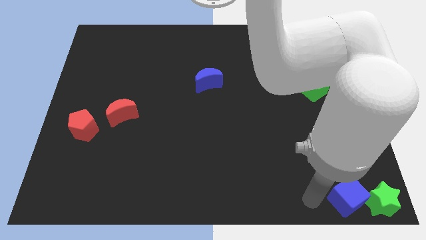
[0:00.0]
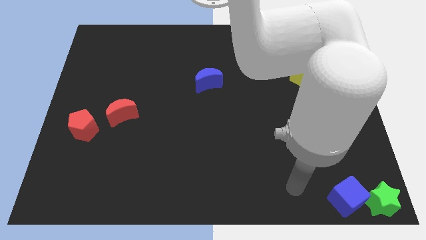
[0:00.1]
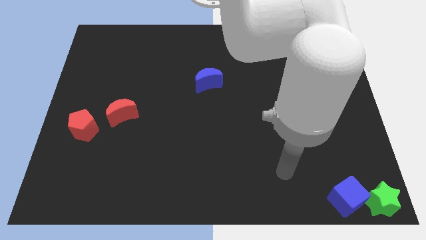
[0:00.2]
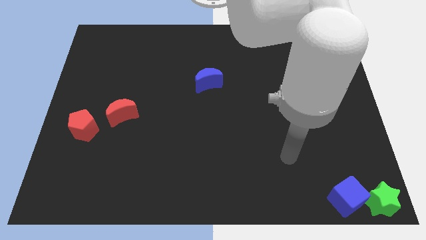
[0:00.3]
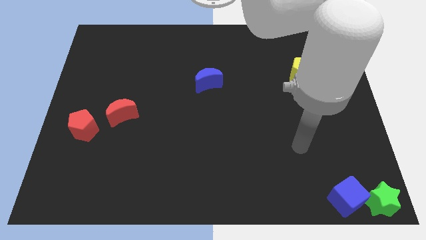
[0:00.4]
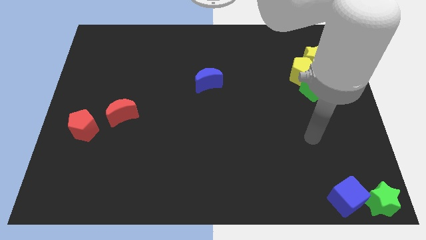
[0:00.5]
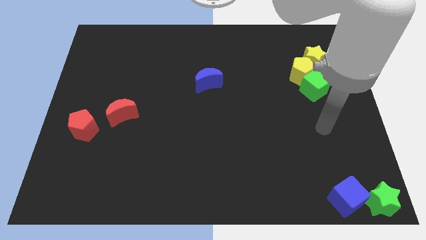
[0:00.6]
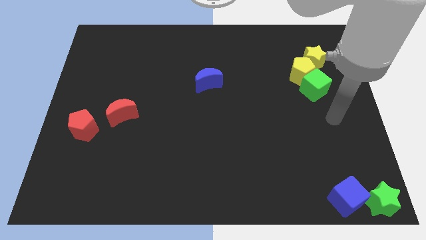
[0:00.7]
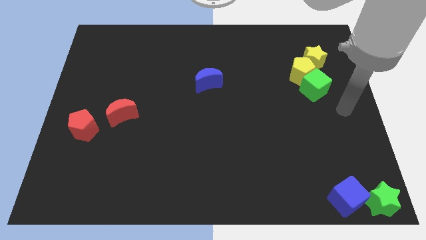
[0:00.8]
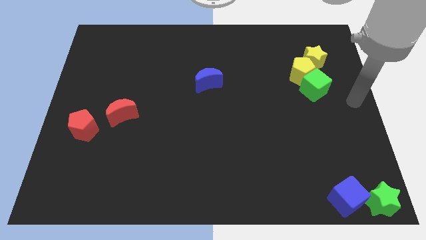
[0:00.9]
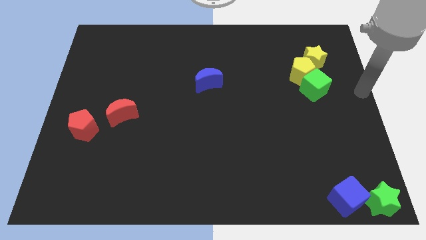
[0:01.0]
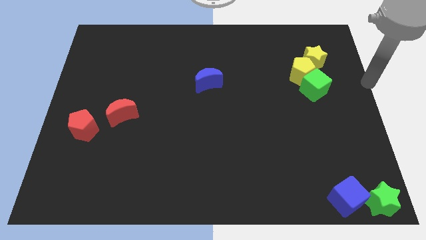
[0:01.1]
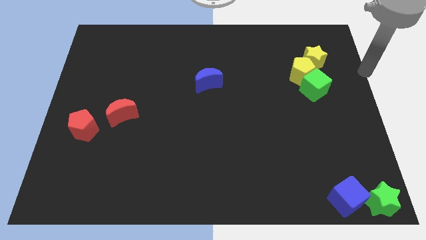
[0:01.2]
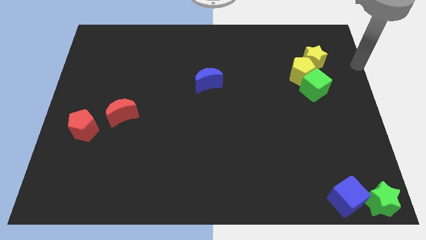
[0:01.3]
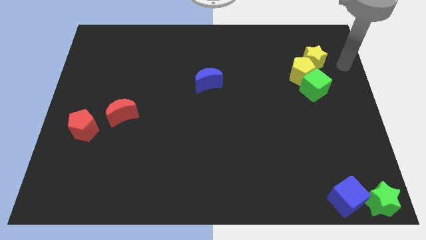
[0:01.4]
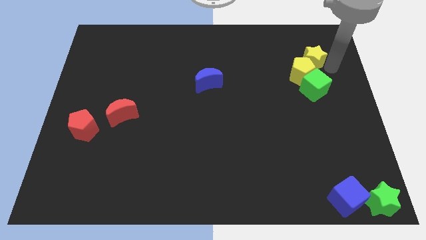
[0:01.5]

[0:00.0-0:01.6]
point the arm to the right of the yellow pentagon

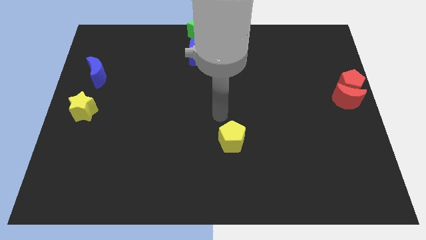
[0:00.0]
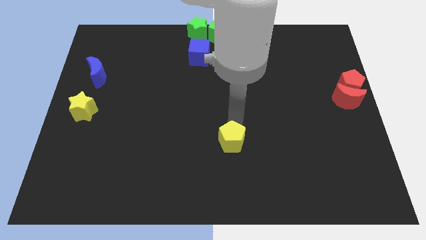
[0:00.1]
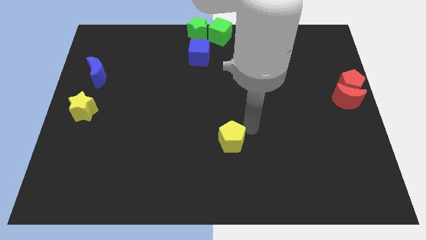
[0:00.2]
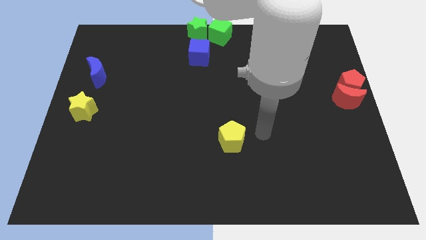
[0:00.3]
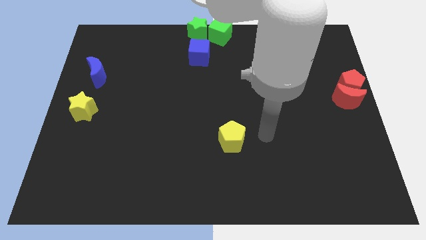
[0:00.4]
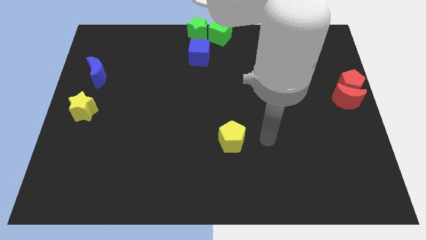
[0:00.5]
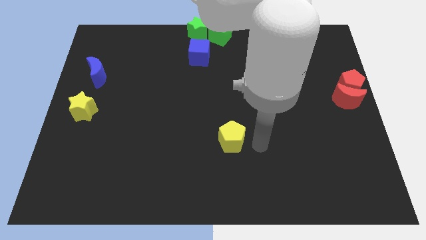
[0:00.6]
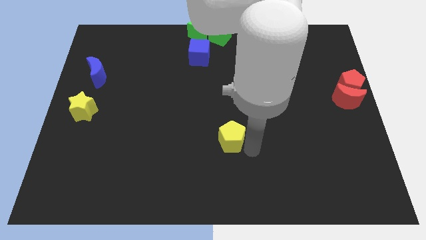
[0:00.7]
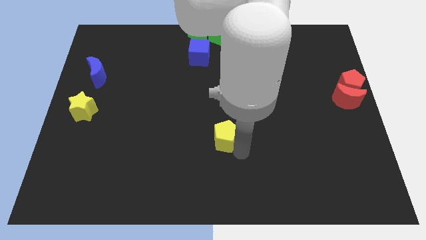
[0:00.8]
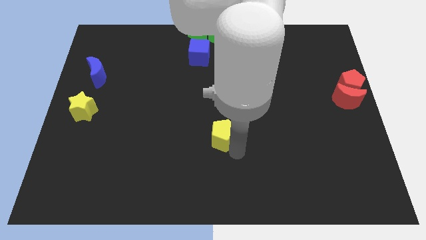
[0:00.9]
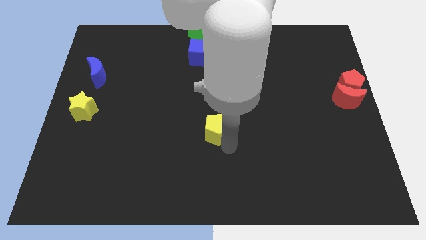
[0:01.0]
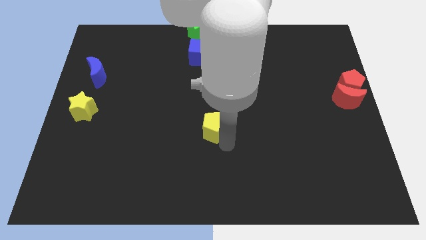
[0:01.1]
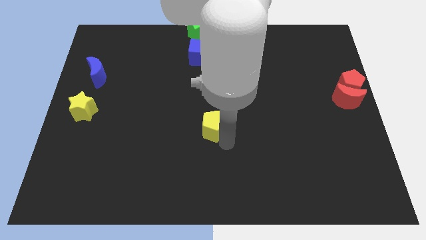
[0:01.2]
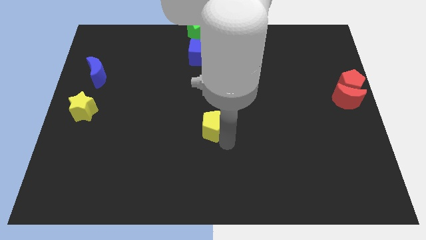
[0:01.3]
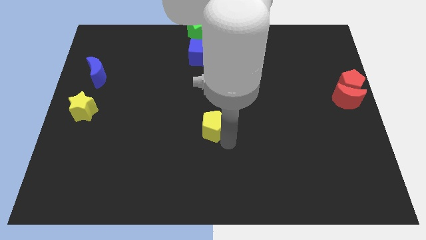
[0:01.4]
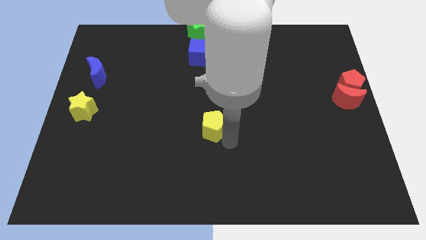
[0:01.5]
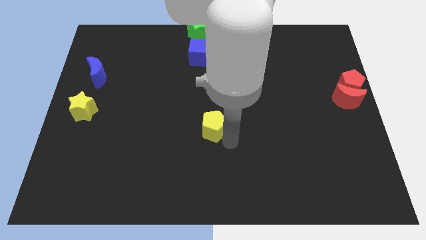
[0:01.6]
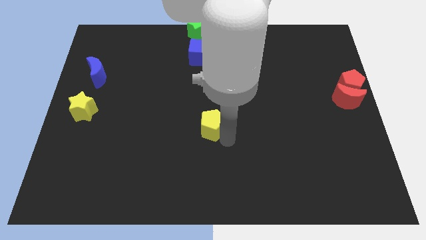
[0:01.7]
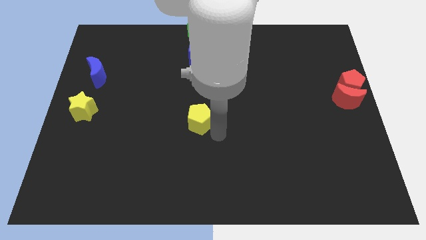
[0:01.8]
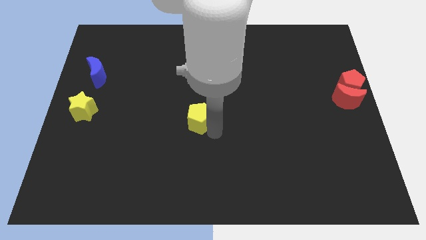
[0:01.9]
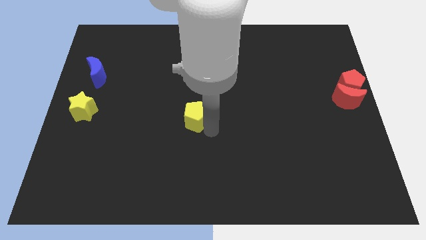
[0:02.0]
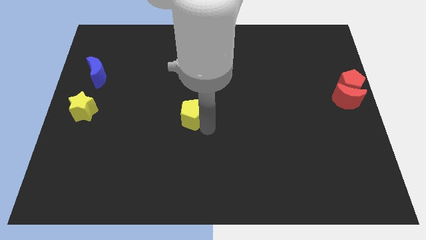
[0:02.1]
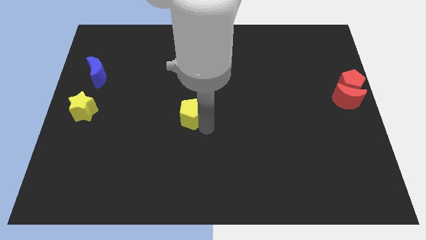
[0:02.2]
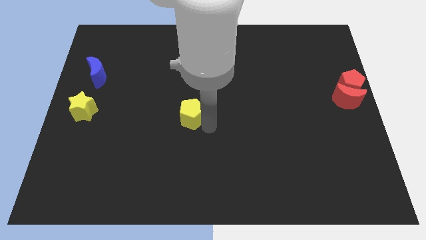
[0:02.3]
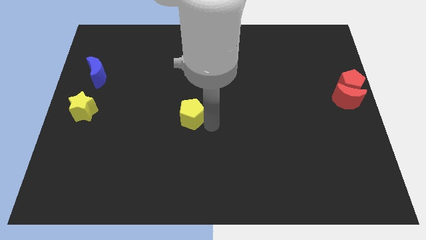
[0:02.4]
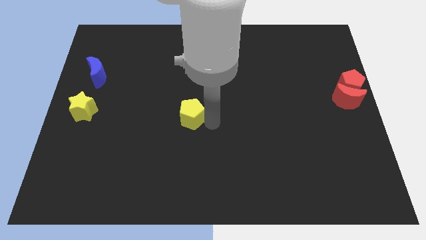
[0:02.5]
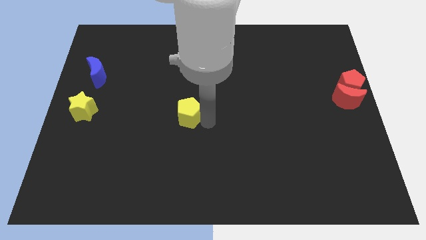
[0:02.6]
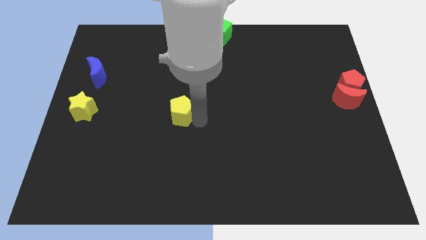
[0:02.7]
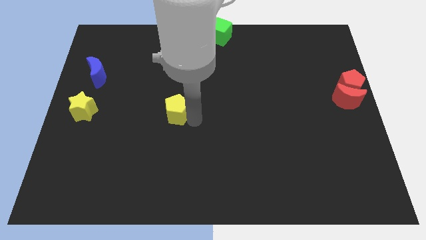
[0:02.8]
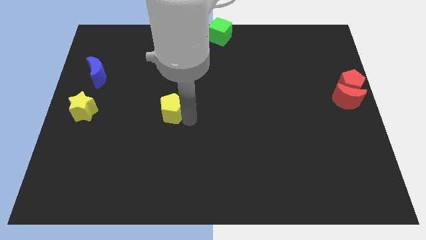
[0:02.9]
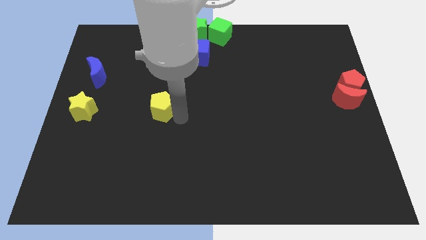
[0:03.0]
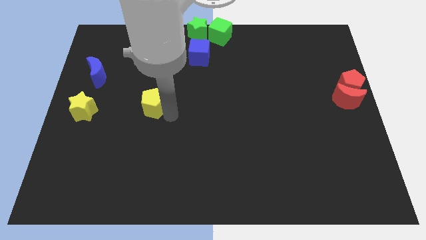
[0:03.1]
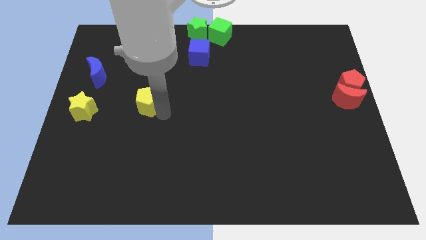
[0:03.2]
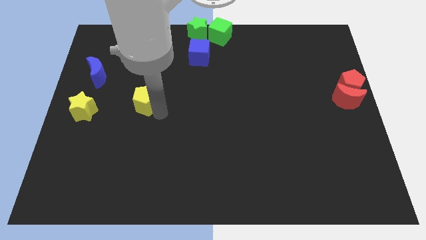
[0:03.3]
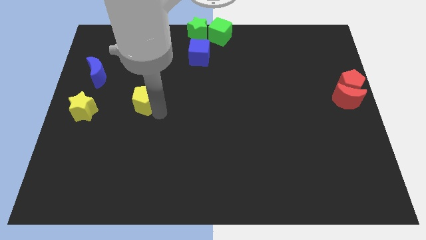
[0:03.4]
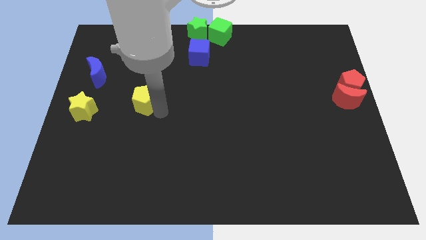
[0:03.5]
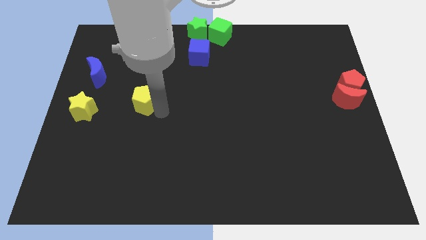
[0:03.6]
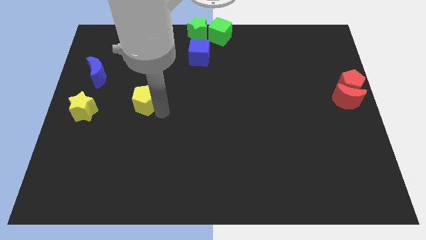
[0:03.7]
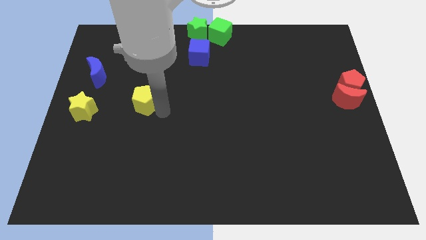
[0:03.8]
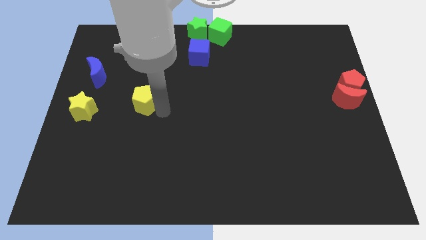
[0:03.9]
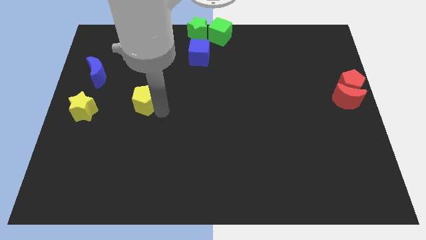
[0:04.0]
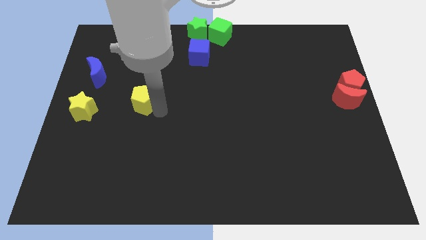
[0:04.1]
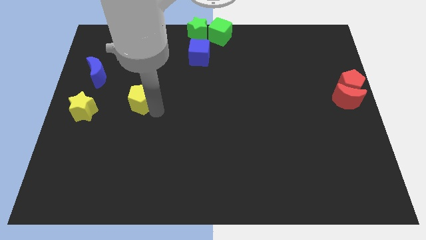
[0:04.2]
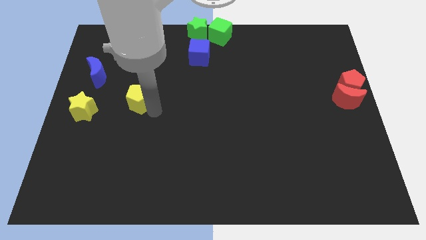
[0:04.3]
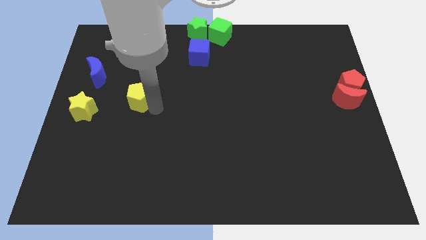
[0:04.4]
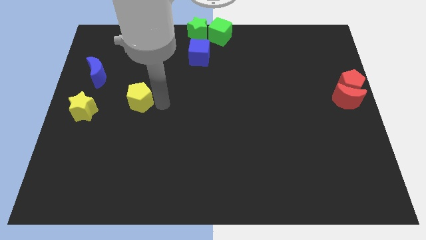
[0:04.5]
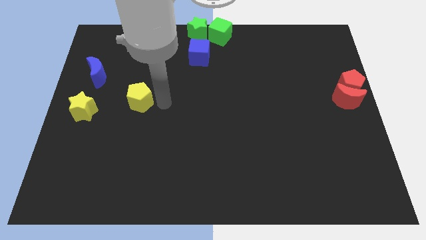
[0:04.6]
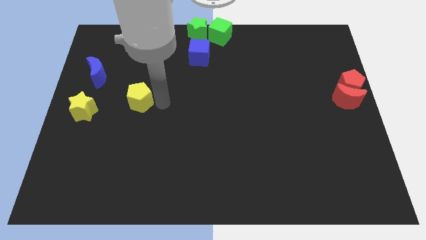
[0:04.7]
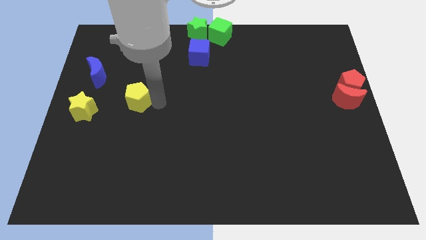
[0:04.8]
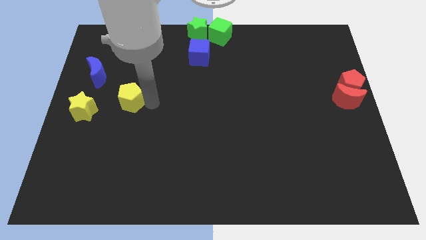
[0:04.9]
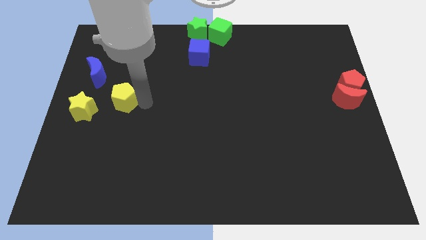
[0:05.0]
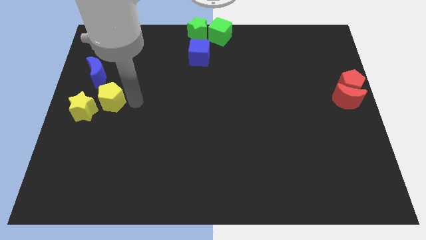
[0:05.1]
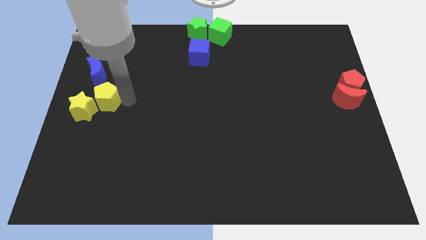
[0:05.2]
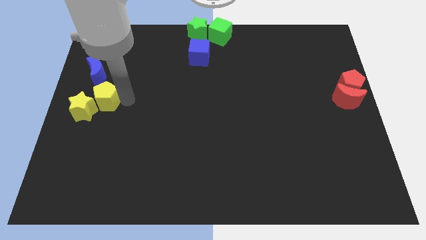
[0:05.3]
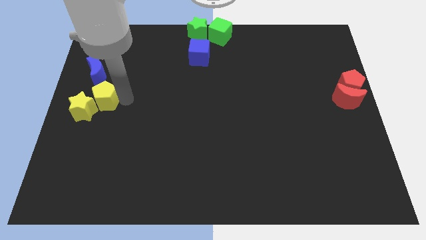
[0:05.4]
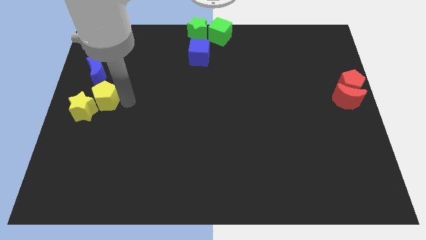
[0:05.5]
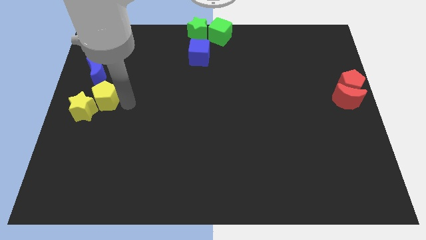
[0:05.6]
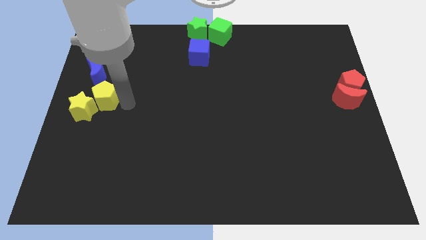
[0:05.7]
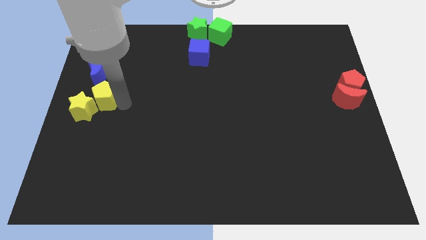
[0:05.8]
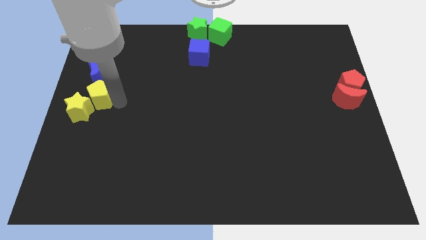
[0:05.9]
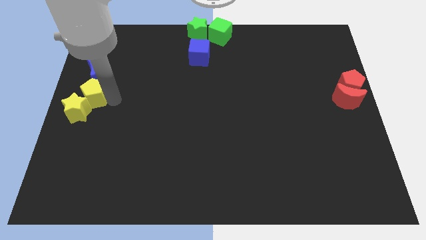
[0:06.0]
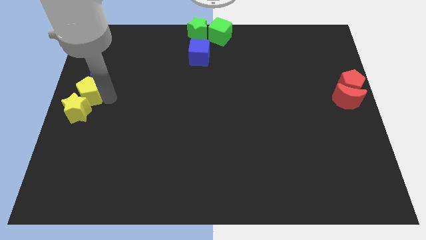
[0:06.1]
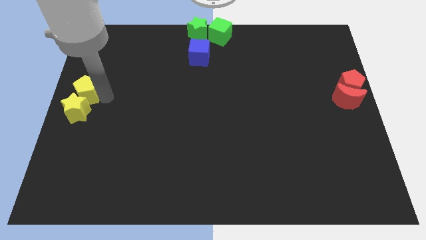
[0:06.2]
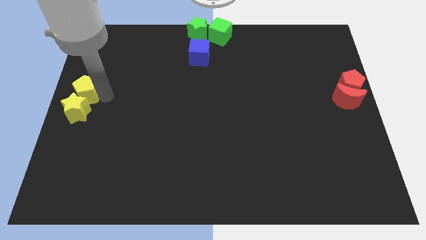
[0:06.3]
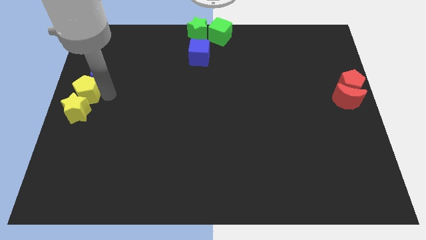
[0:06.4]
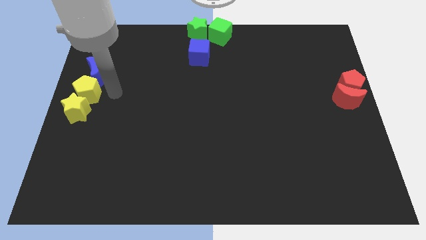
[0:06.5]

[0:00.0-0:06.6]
push the yellow pentagon to the top of the yellow star

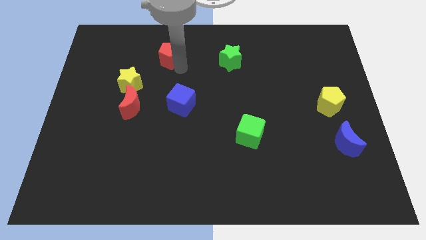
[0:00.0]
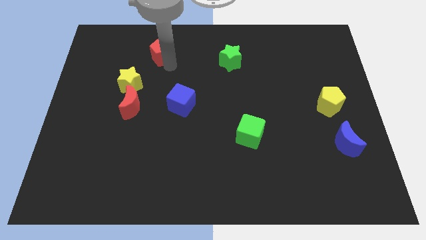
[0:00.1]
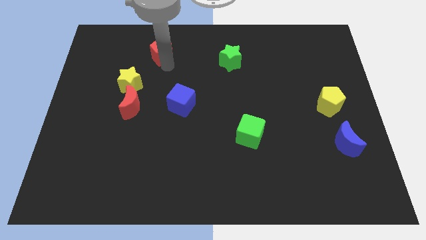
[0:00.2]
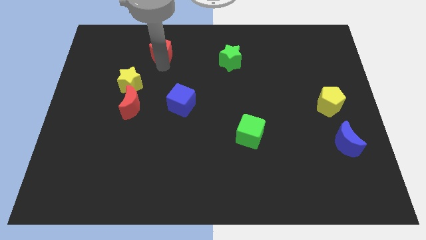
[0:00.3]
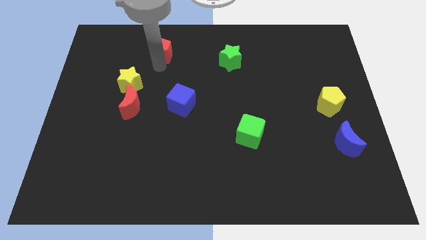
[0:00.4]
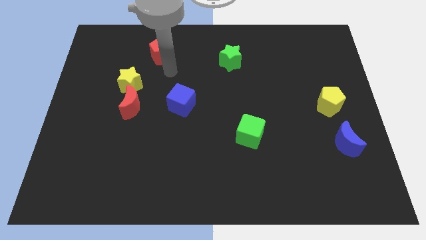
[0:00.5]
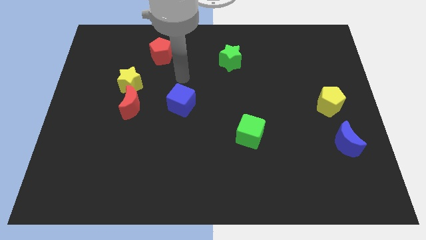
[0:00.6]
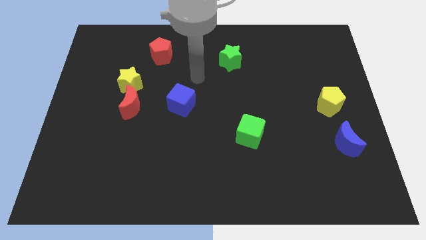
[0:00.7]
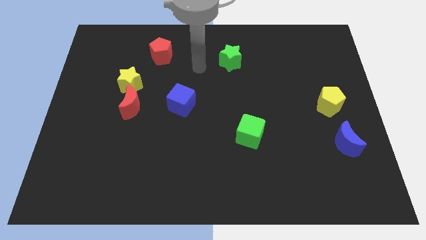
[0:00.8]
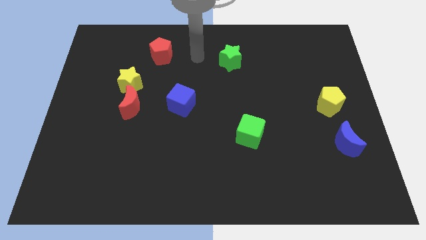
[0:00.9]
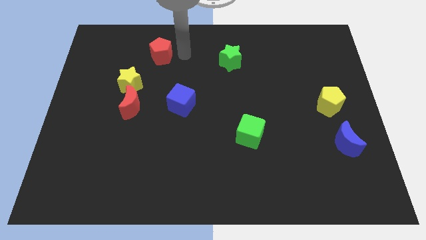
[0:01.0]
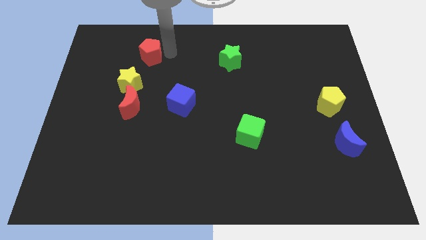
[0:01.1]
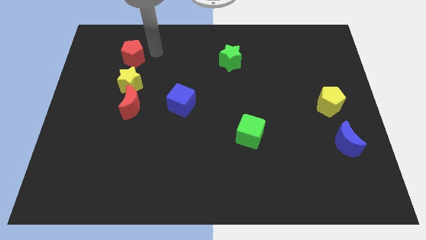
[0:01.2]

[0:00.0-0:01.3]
place the red pentagon above the yellow star
